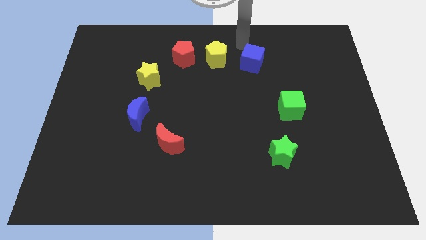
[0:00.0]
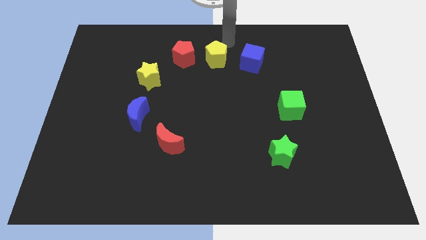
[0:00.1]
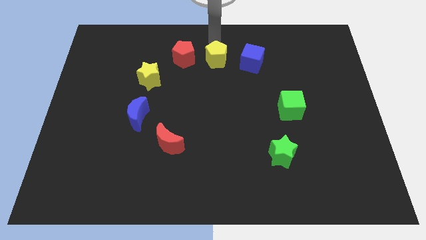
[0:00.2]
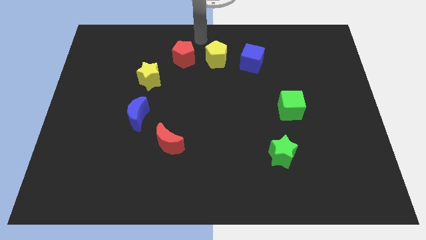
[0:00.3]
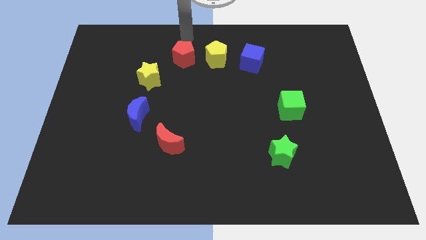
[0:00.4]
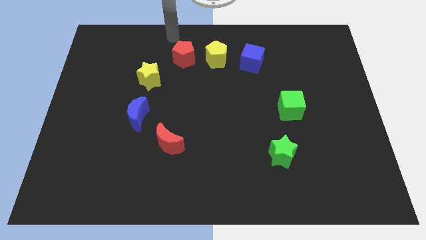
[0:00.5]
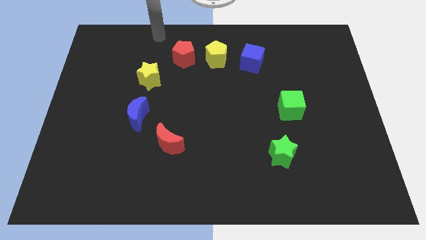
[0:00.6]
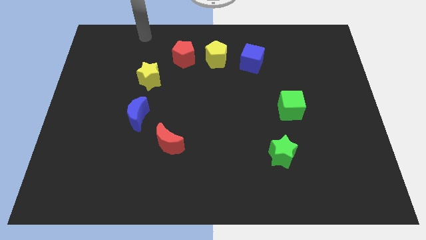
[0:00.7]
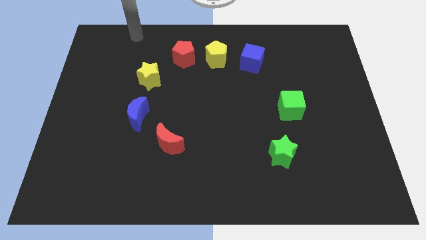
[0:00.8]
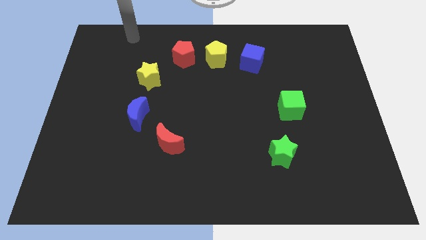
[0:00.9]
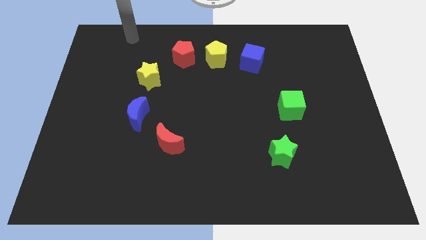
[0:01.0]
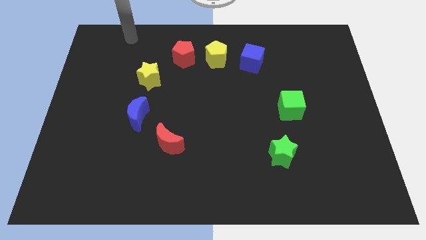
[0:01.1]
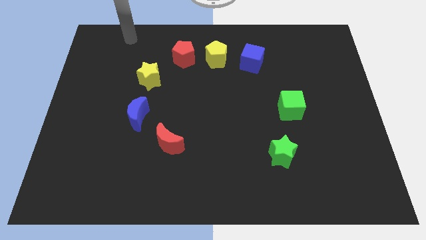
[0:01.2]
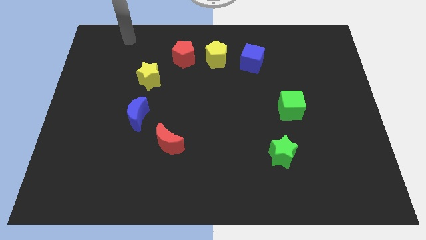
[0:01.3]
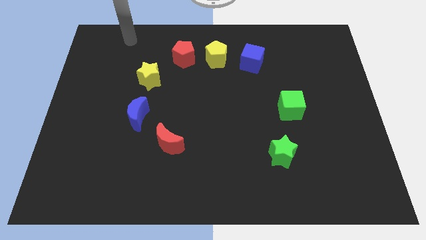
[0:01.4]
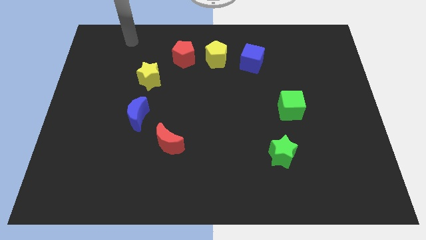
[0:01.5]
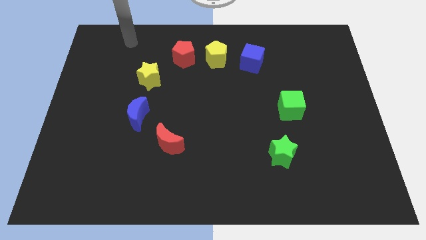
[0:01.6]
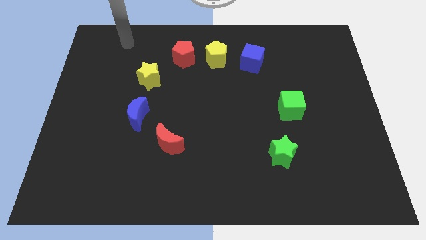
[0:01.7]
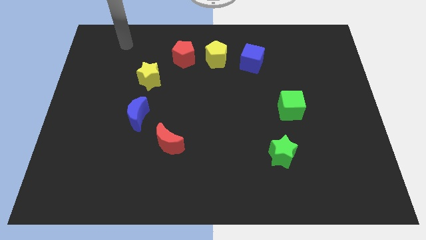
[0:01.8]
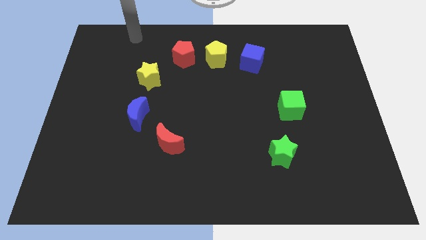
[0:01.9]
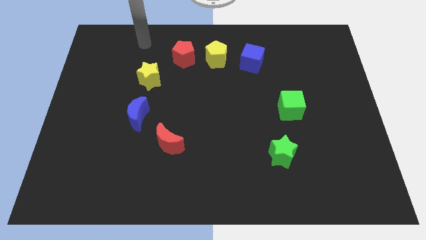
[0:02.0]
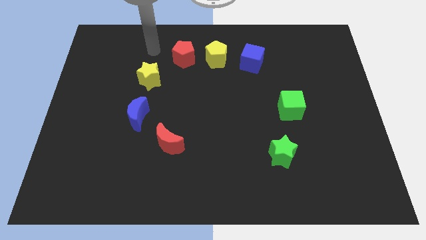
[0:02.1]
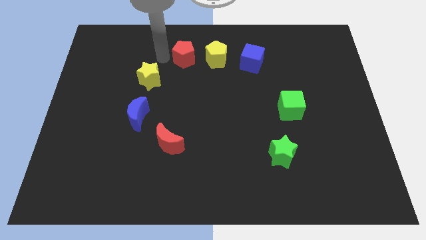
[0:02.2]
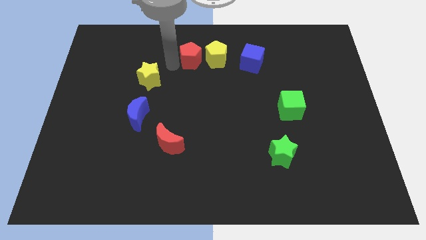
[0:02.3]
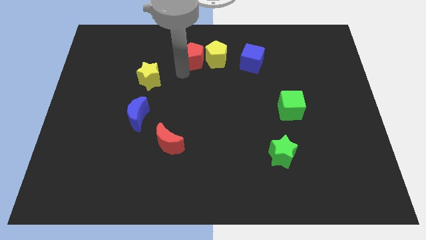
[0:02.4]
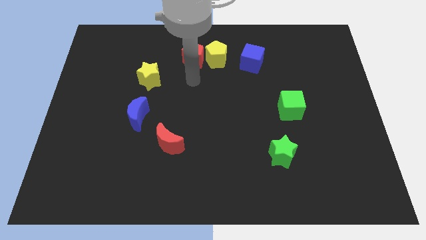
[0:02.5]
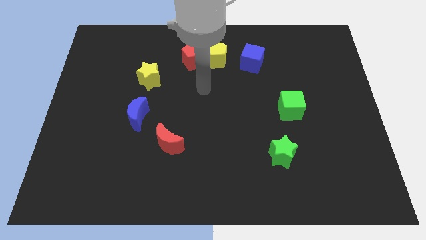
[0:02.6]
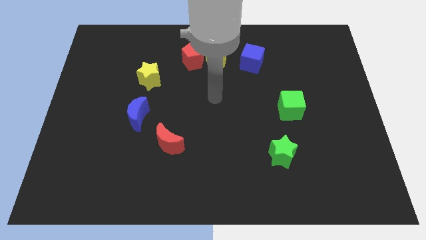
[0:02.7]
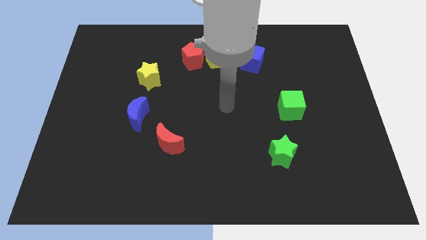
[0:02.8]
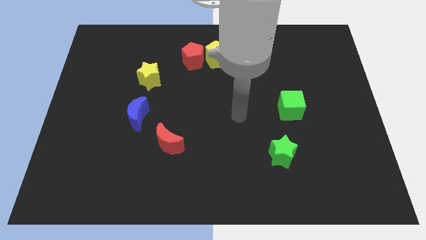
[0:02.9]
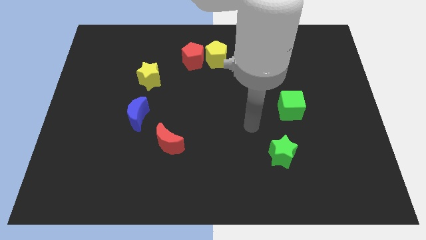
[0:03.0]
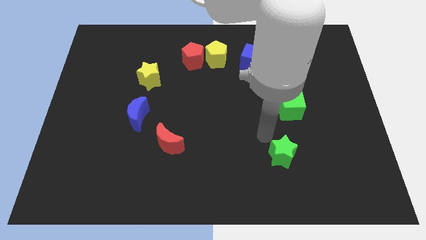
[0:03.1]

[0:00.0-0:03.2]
push the red pentagon towards the left side of yellow pentagon

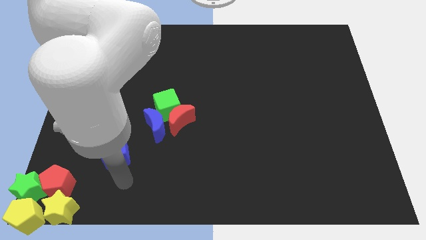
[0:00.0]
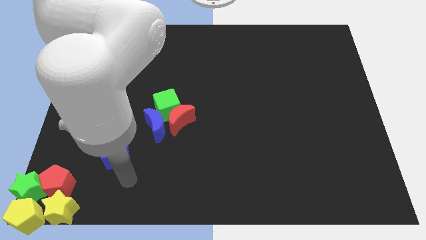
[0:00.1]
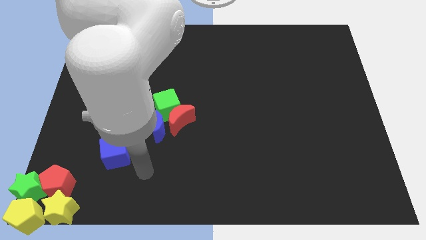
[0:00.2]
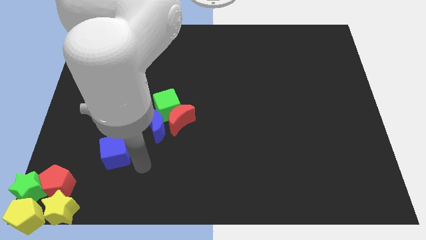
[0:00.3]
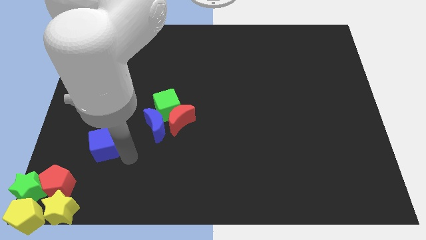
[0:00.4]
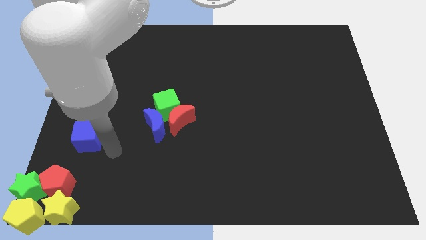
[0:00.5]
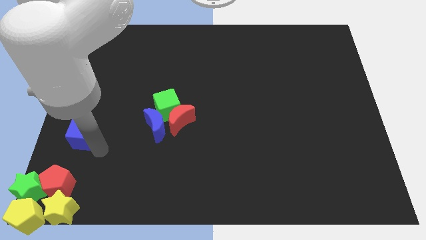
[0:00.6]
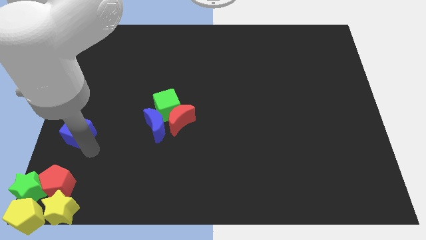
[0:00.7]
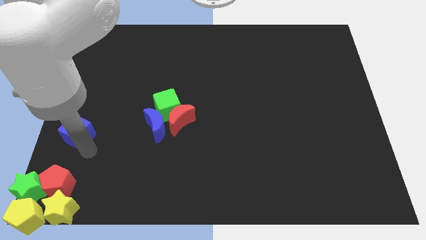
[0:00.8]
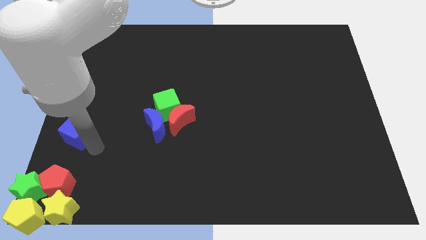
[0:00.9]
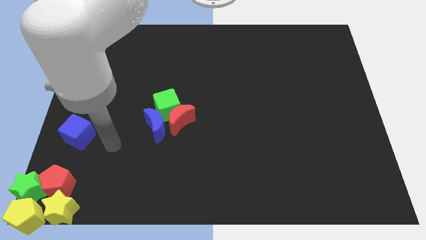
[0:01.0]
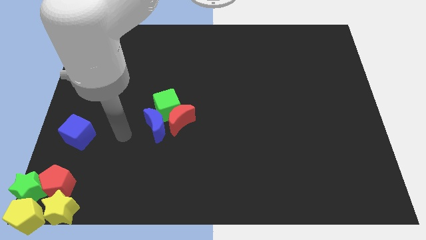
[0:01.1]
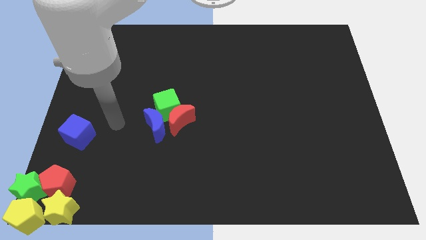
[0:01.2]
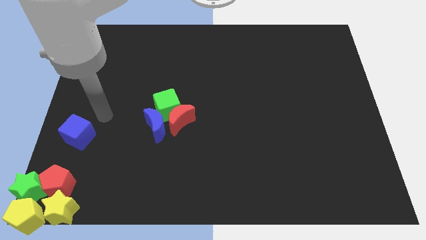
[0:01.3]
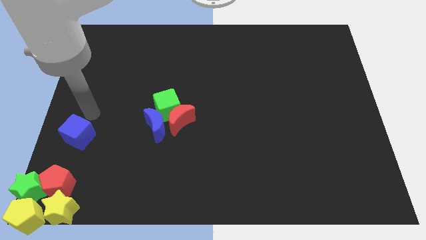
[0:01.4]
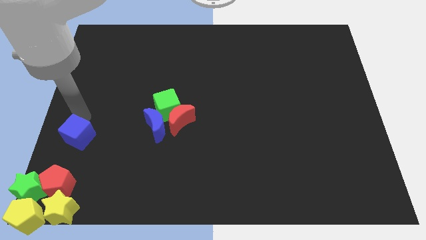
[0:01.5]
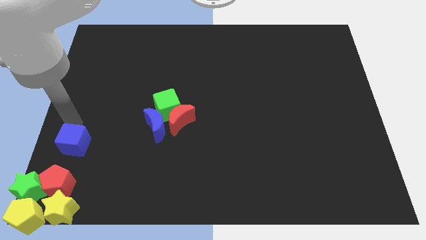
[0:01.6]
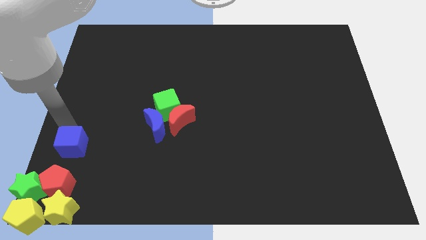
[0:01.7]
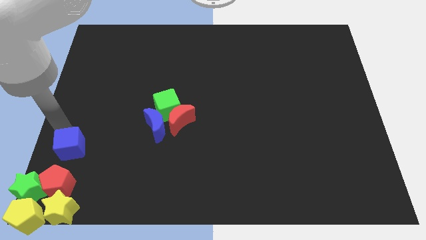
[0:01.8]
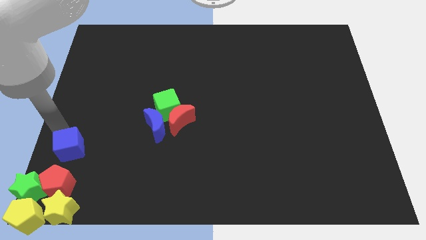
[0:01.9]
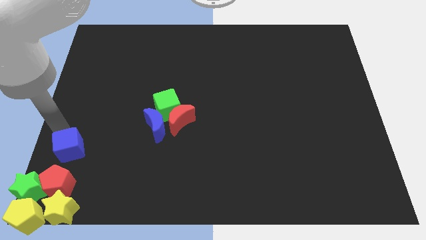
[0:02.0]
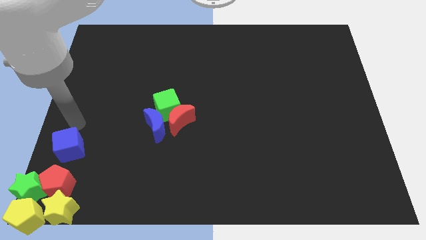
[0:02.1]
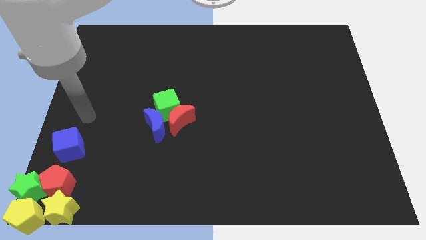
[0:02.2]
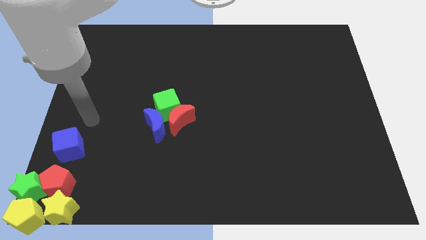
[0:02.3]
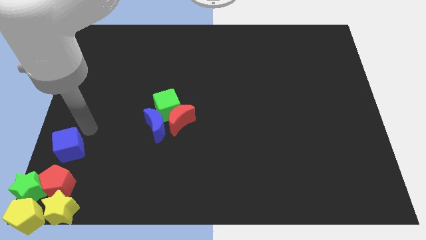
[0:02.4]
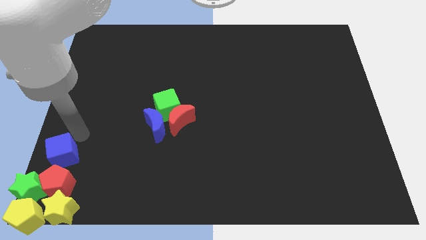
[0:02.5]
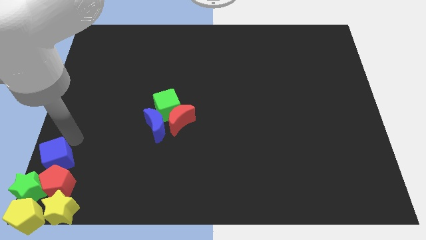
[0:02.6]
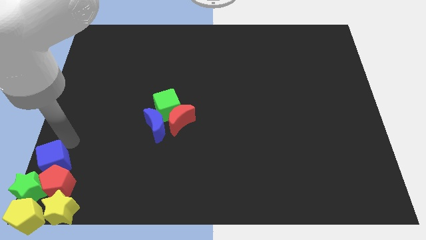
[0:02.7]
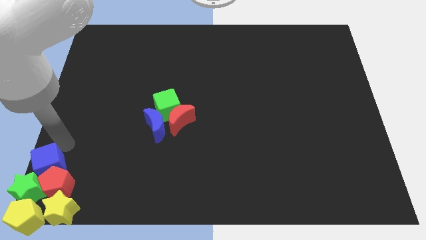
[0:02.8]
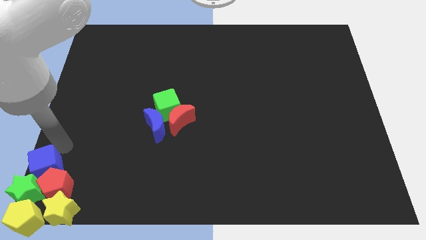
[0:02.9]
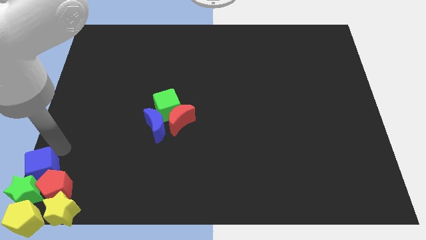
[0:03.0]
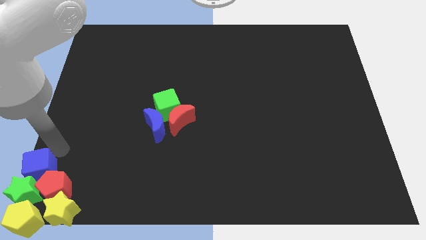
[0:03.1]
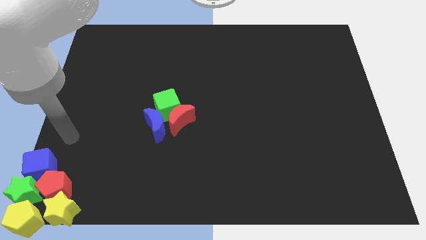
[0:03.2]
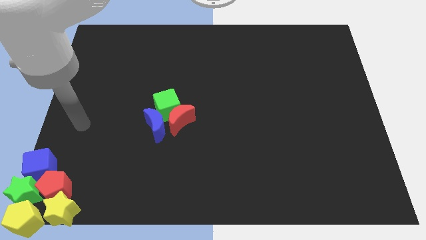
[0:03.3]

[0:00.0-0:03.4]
drag the blue cube into group of blocks

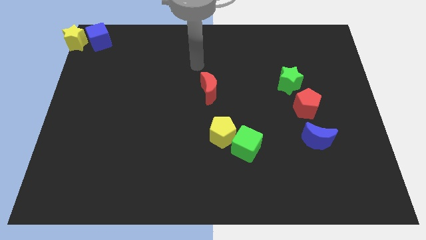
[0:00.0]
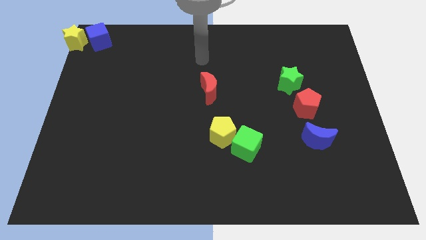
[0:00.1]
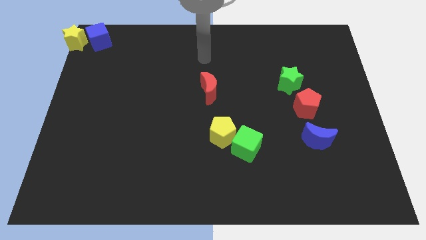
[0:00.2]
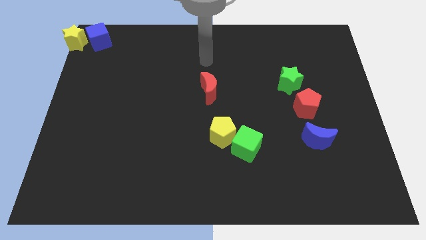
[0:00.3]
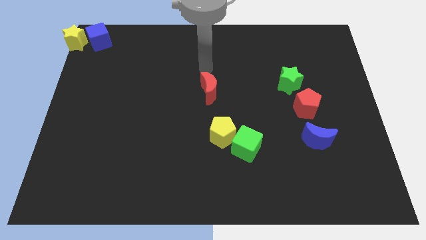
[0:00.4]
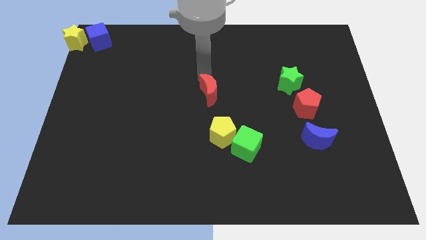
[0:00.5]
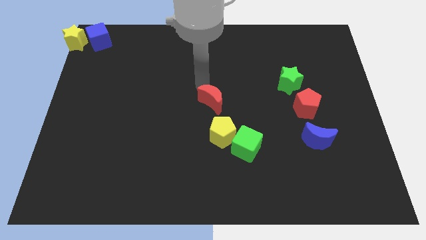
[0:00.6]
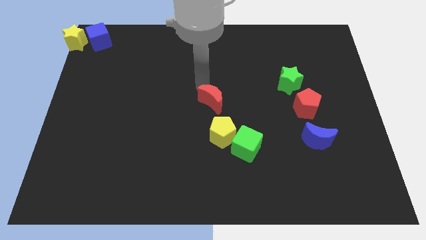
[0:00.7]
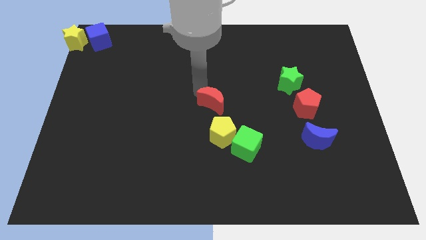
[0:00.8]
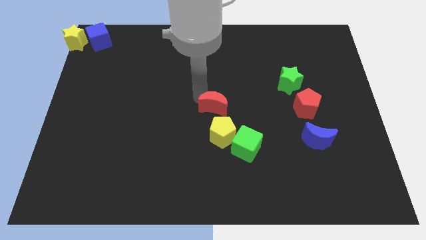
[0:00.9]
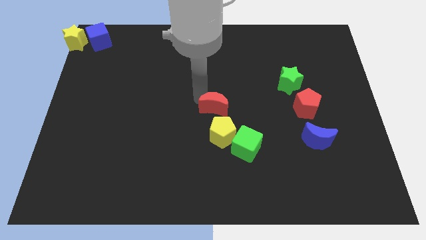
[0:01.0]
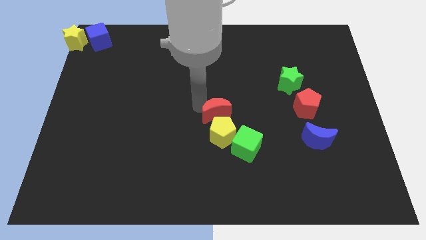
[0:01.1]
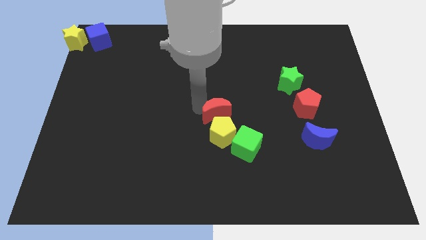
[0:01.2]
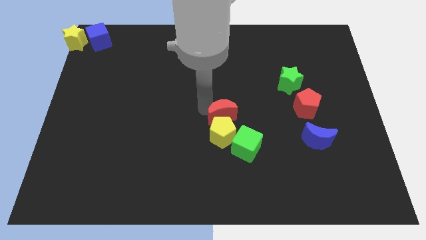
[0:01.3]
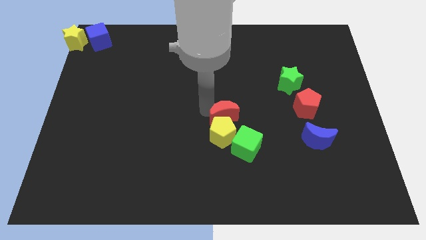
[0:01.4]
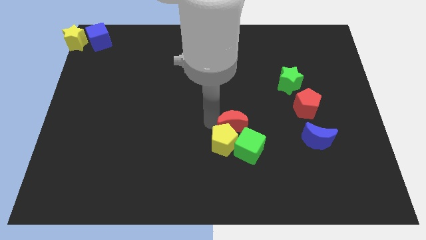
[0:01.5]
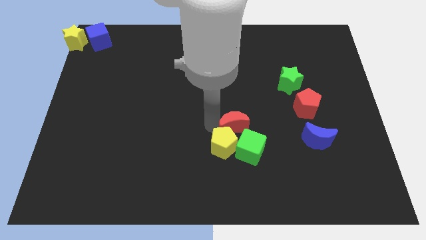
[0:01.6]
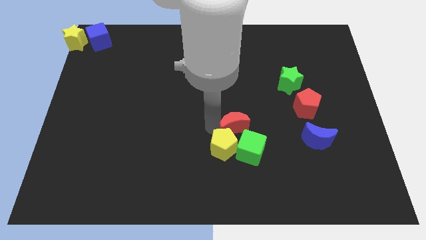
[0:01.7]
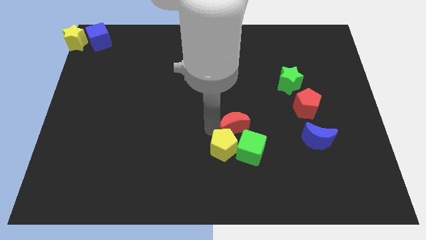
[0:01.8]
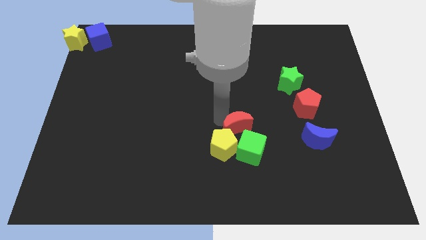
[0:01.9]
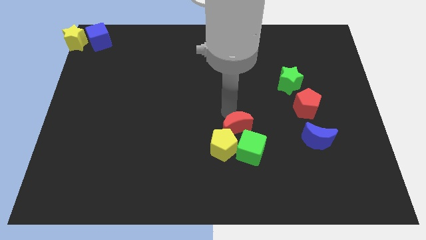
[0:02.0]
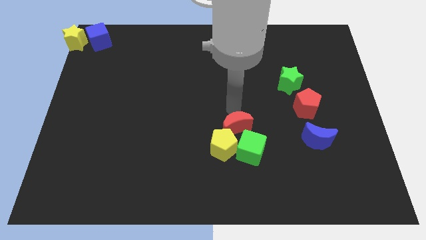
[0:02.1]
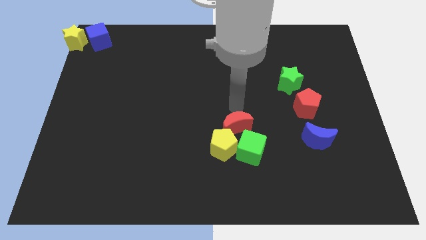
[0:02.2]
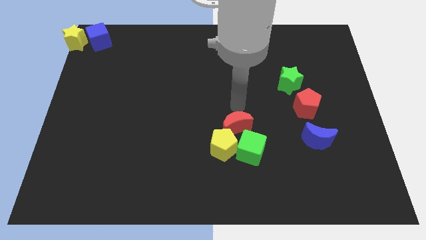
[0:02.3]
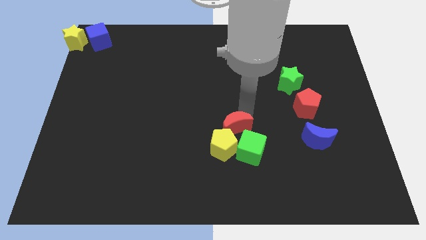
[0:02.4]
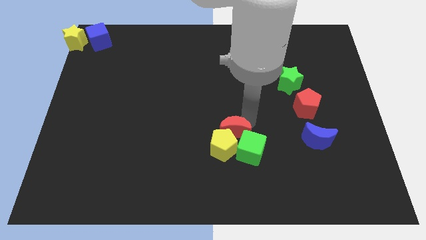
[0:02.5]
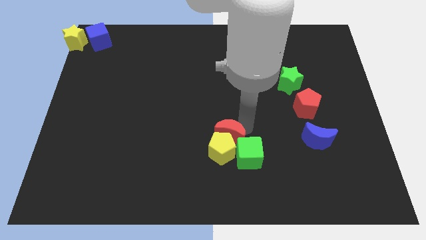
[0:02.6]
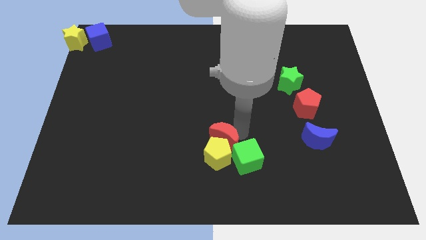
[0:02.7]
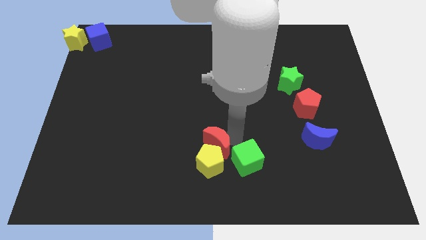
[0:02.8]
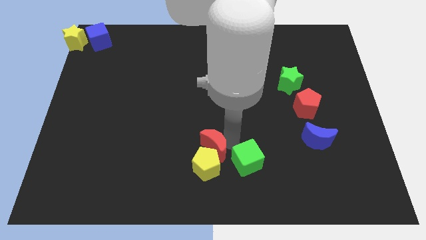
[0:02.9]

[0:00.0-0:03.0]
push the red moon into the yellow pentagon and the green cube
